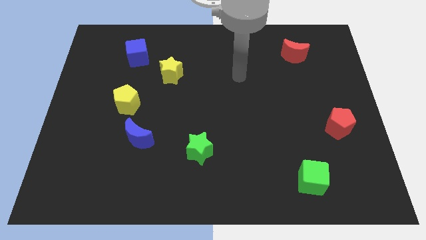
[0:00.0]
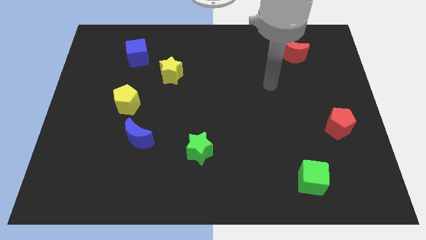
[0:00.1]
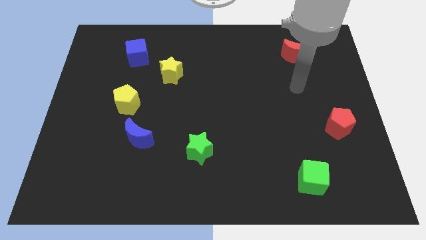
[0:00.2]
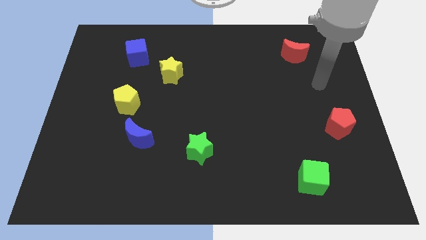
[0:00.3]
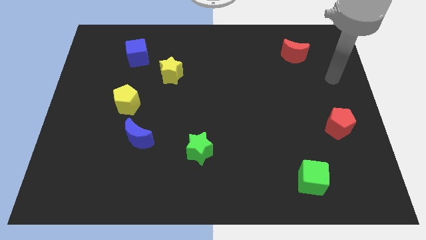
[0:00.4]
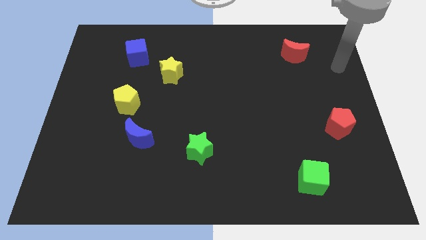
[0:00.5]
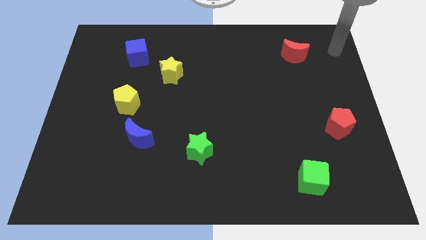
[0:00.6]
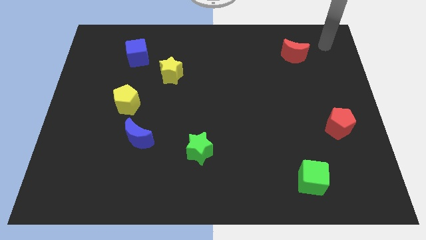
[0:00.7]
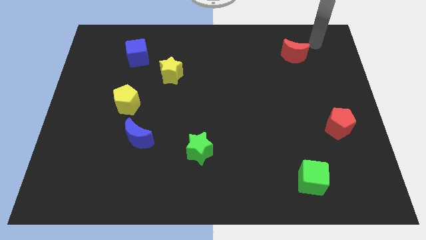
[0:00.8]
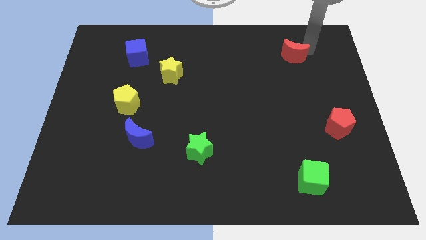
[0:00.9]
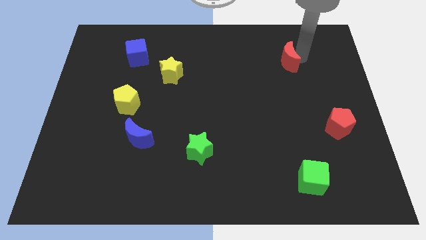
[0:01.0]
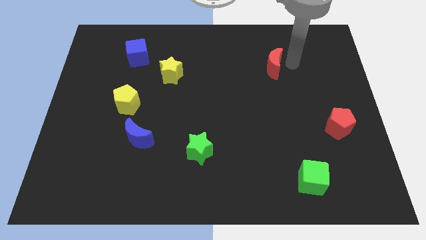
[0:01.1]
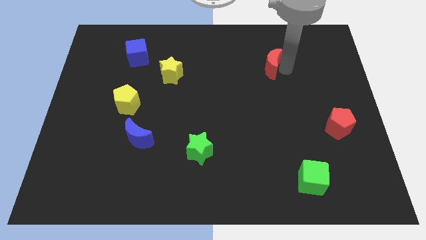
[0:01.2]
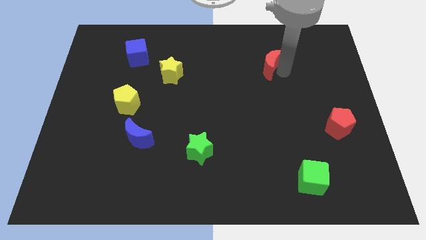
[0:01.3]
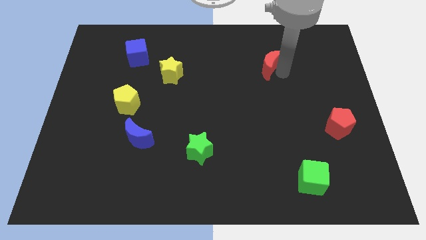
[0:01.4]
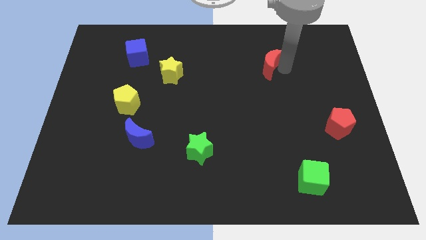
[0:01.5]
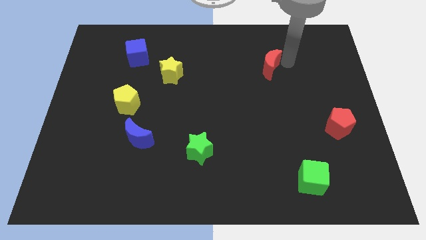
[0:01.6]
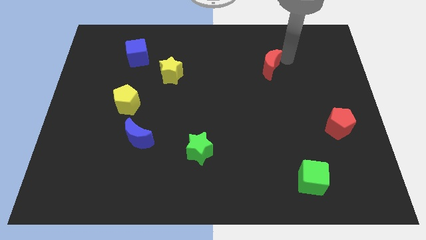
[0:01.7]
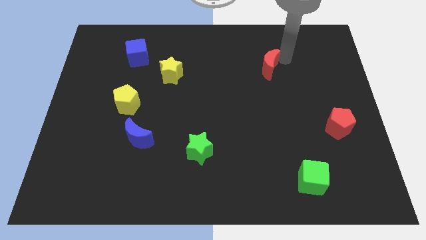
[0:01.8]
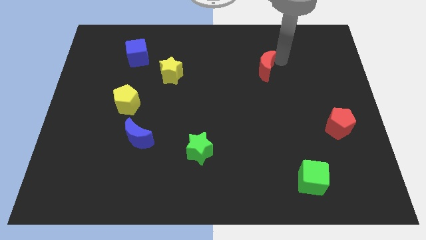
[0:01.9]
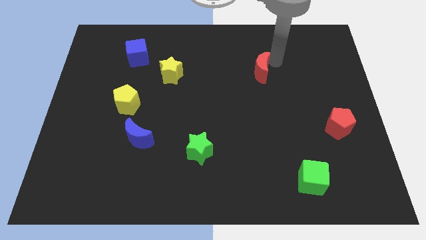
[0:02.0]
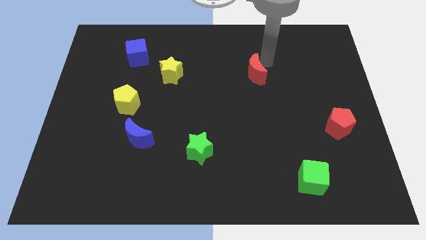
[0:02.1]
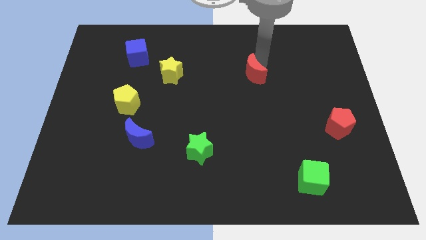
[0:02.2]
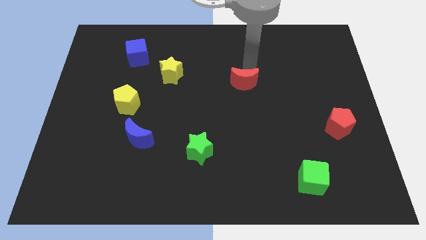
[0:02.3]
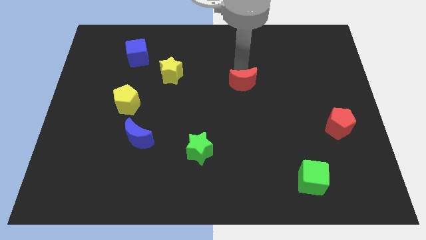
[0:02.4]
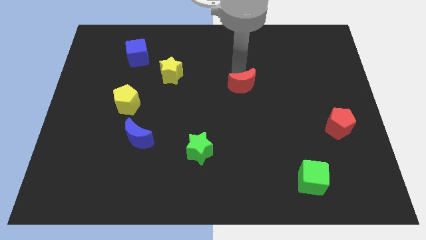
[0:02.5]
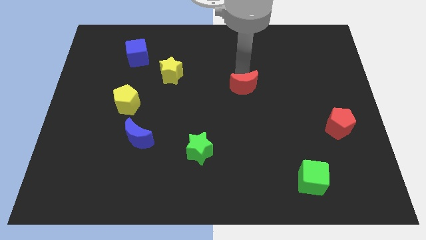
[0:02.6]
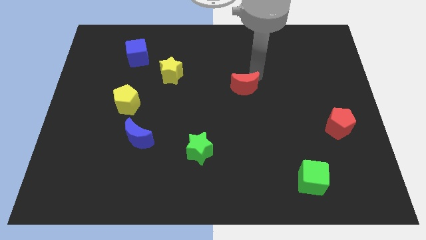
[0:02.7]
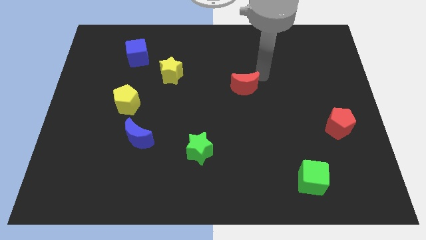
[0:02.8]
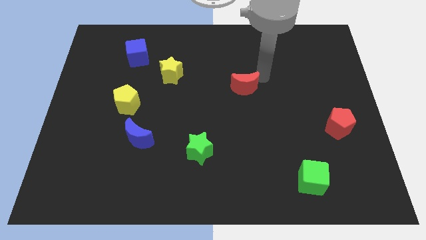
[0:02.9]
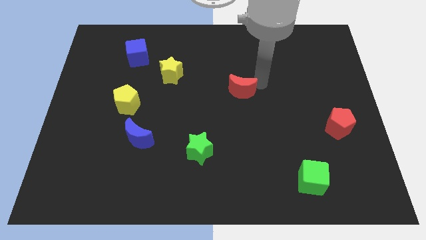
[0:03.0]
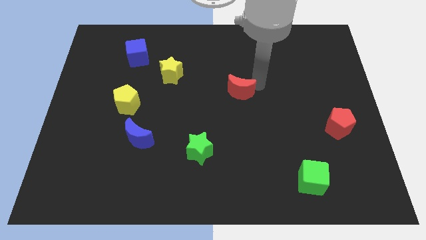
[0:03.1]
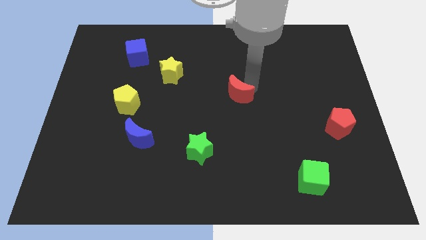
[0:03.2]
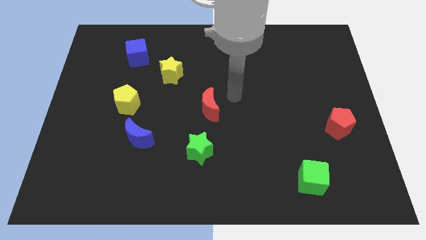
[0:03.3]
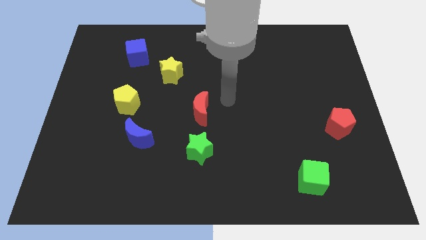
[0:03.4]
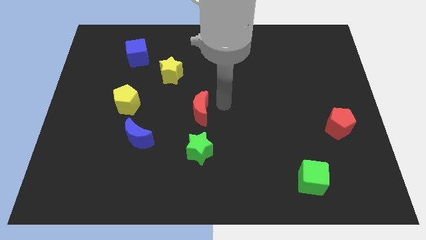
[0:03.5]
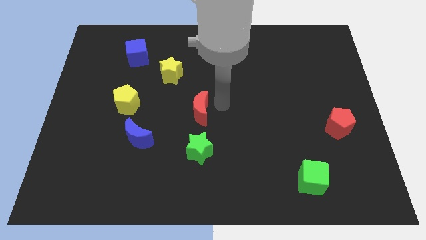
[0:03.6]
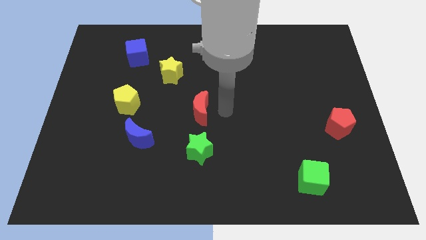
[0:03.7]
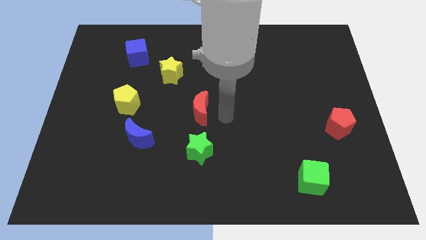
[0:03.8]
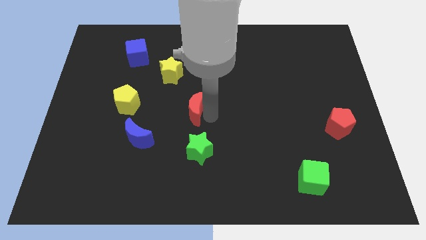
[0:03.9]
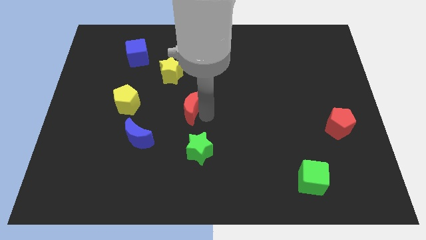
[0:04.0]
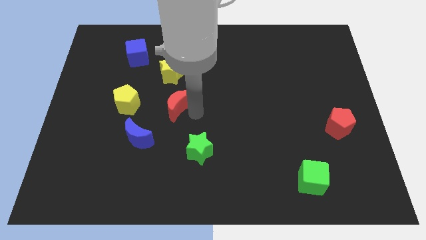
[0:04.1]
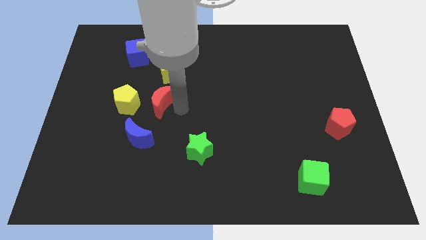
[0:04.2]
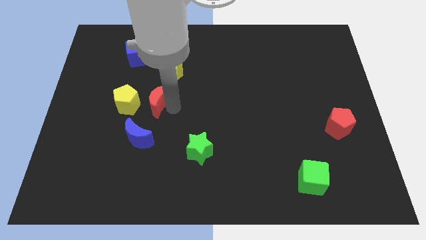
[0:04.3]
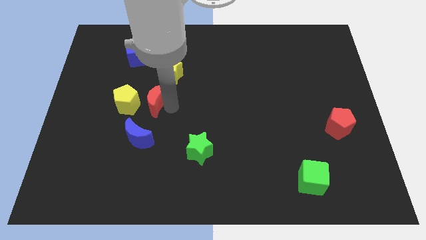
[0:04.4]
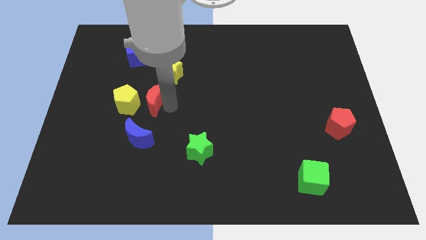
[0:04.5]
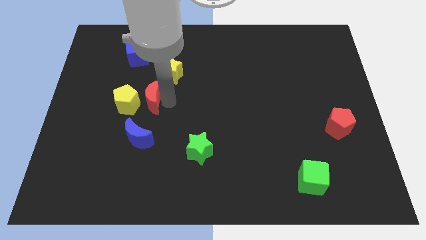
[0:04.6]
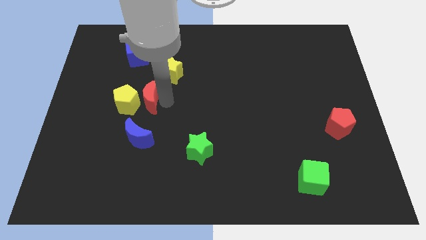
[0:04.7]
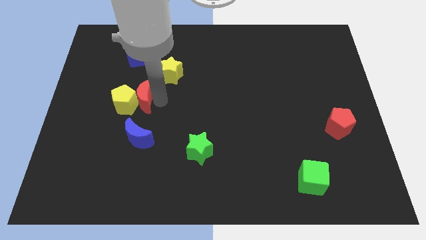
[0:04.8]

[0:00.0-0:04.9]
push the red moon towards the yellow pentagon

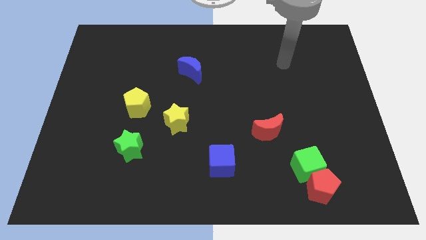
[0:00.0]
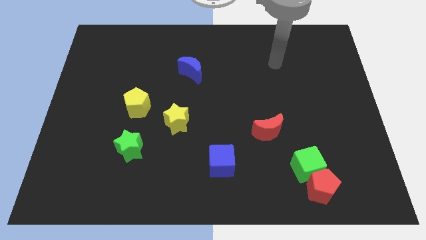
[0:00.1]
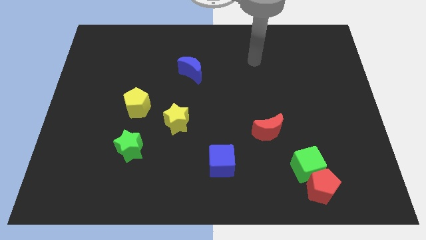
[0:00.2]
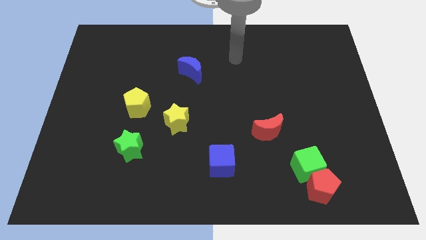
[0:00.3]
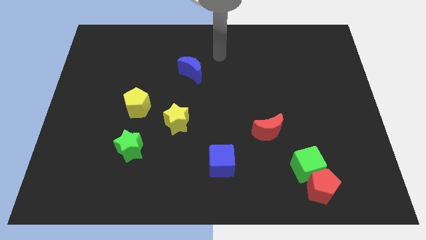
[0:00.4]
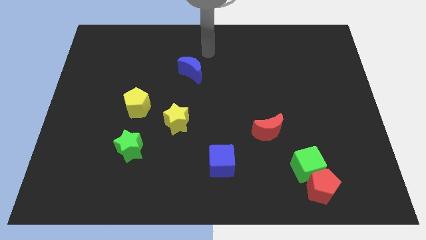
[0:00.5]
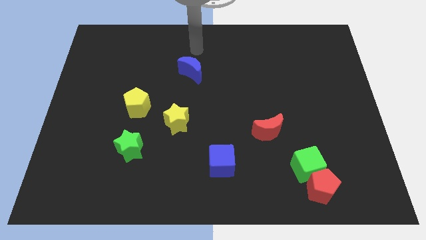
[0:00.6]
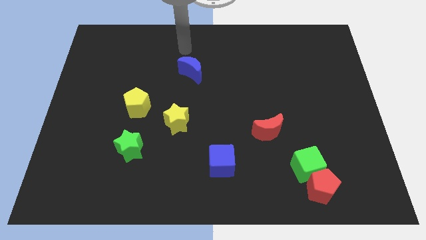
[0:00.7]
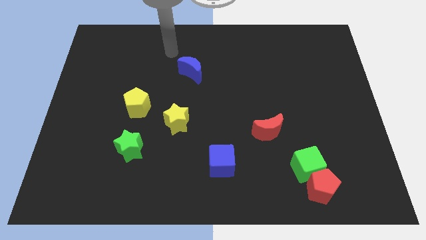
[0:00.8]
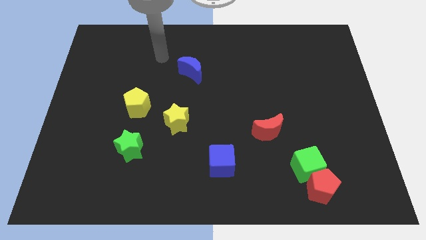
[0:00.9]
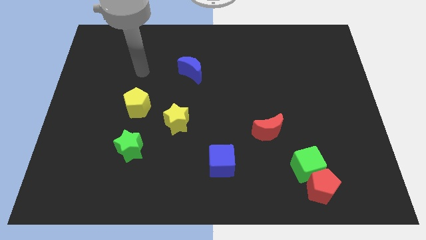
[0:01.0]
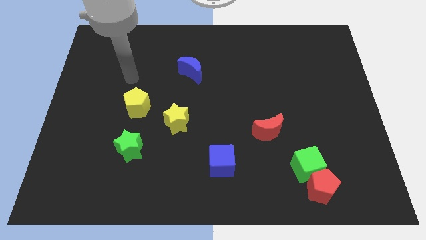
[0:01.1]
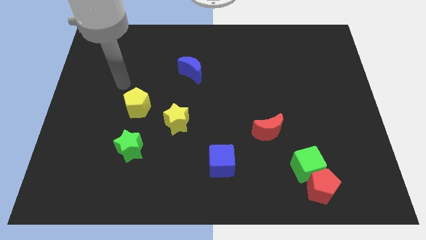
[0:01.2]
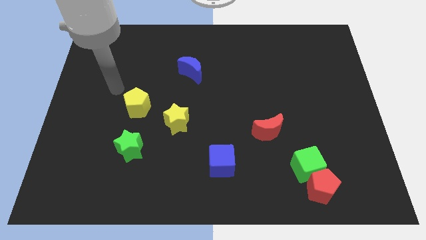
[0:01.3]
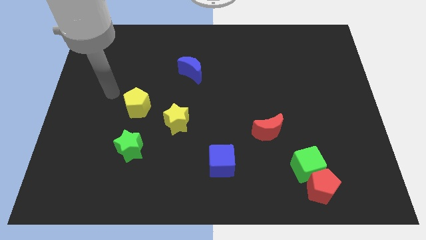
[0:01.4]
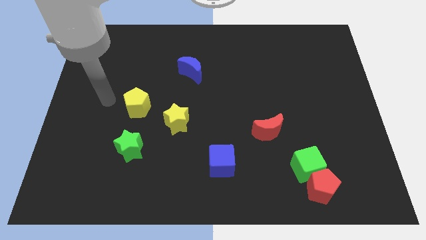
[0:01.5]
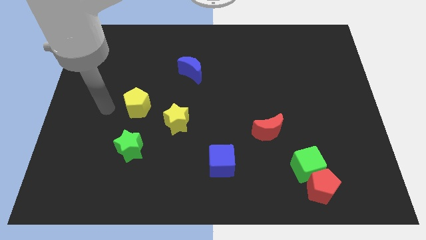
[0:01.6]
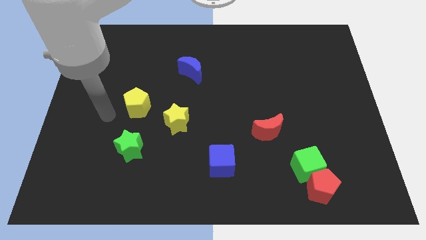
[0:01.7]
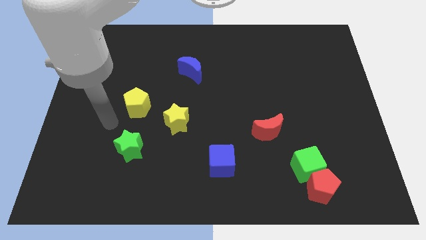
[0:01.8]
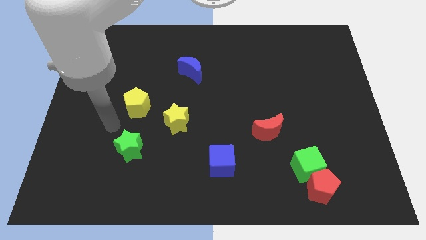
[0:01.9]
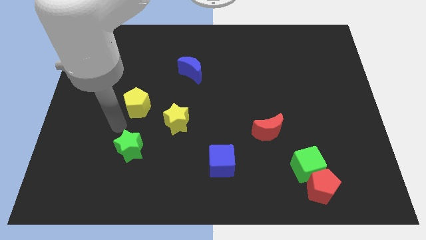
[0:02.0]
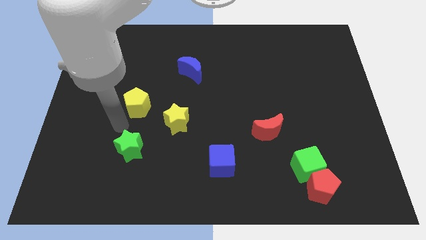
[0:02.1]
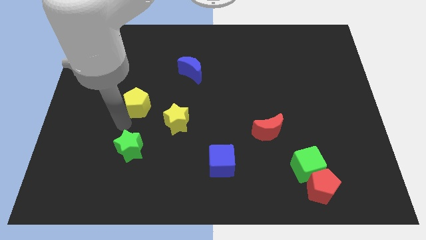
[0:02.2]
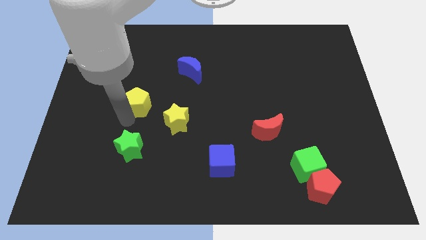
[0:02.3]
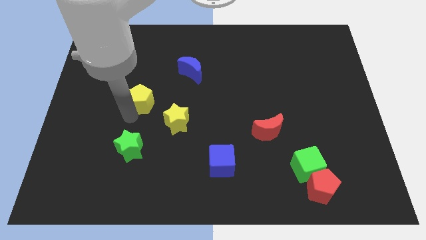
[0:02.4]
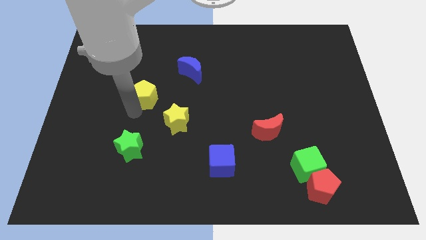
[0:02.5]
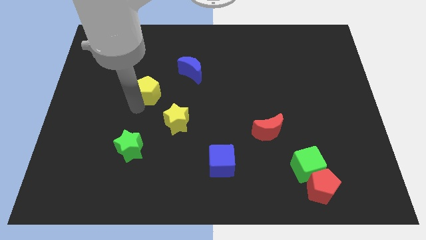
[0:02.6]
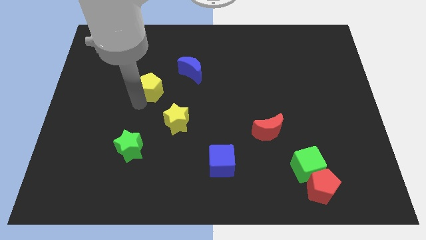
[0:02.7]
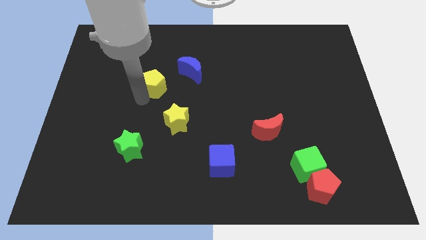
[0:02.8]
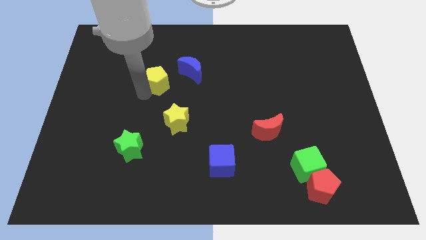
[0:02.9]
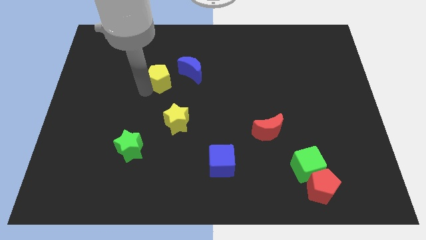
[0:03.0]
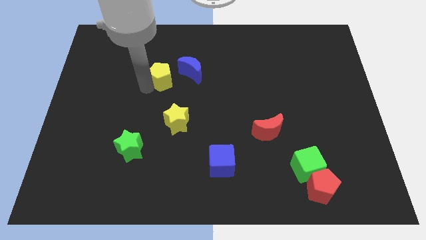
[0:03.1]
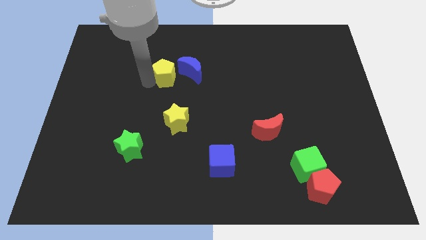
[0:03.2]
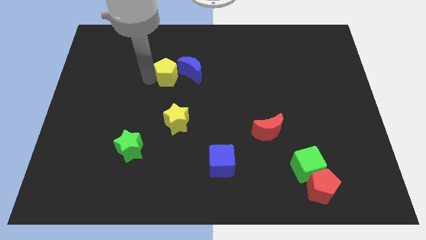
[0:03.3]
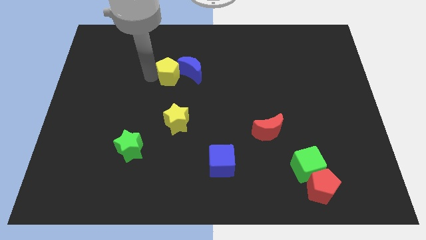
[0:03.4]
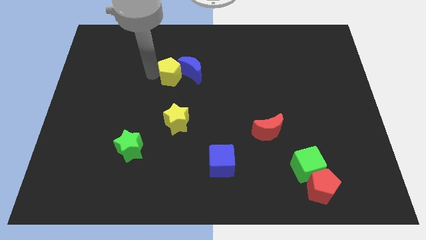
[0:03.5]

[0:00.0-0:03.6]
push the yellow pentagon to the blue moon
